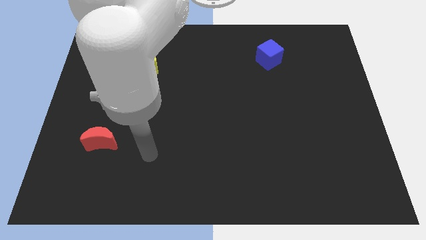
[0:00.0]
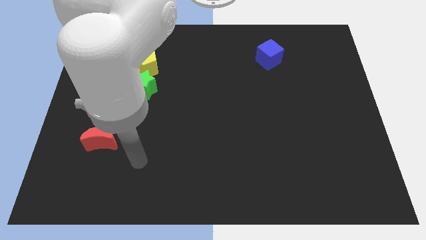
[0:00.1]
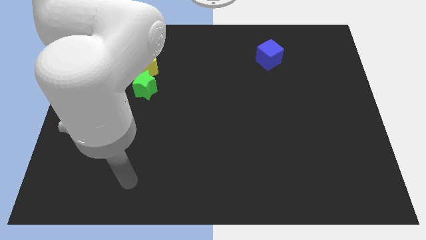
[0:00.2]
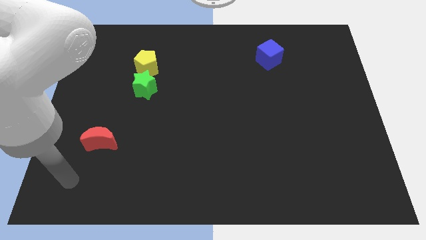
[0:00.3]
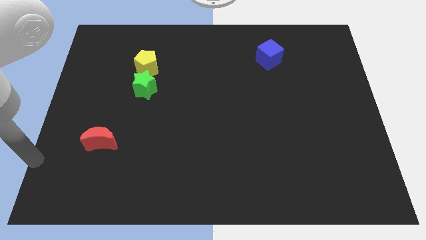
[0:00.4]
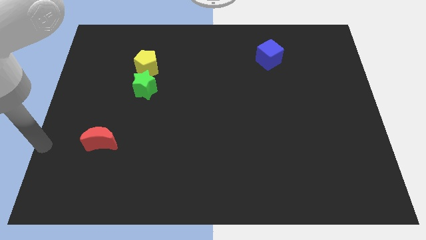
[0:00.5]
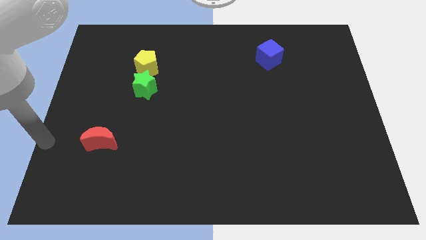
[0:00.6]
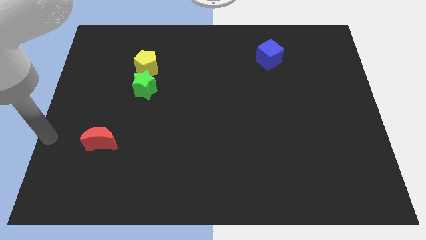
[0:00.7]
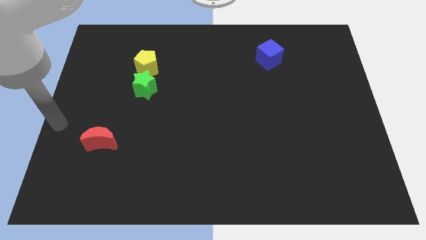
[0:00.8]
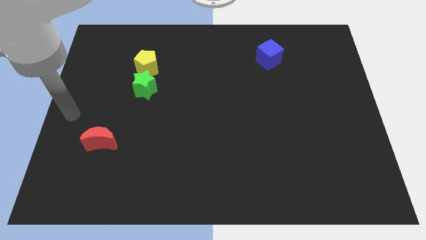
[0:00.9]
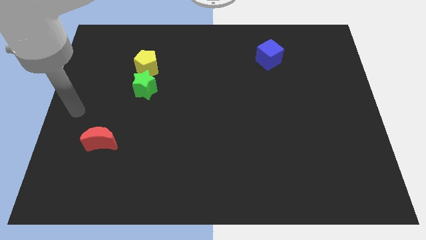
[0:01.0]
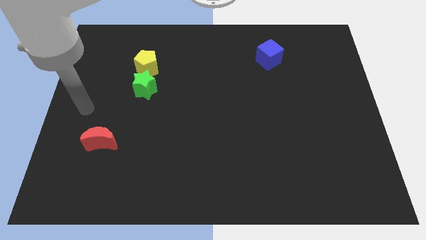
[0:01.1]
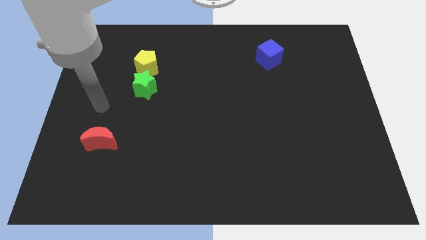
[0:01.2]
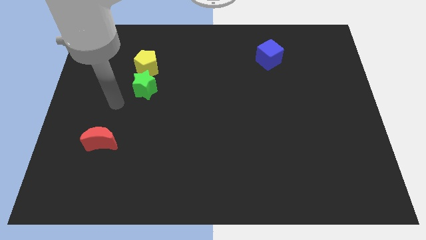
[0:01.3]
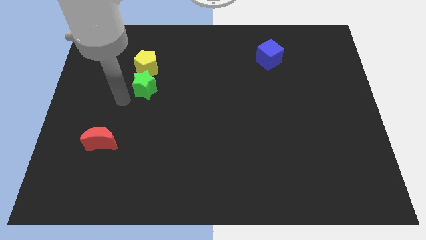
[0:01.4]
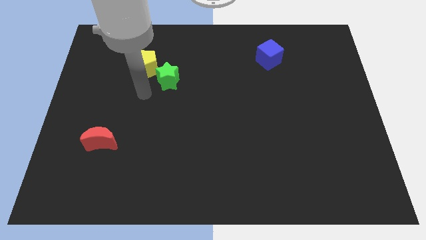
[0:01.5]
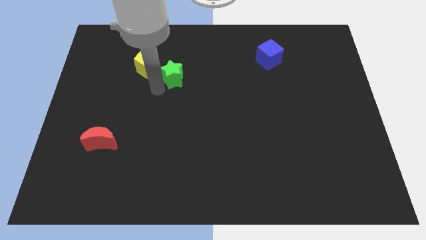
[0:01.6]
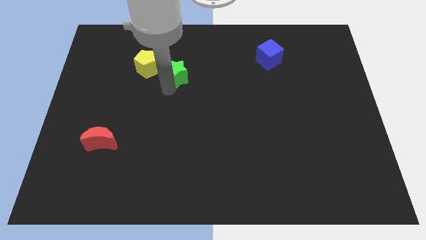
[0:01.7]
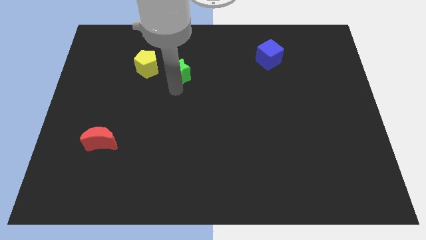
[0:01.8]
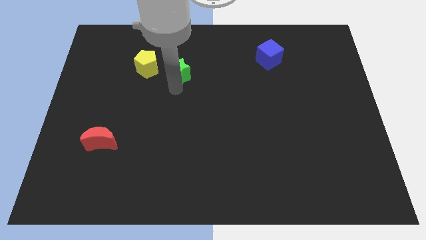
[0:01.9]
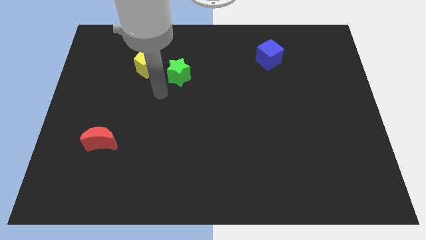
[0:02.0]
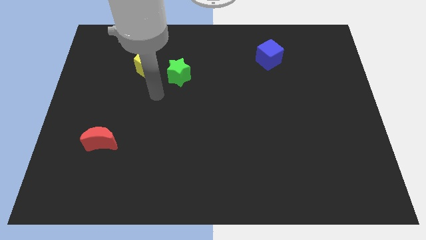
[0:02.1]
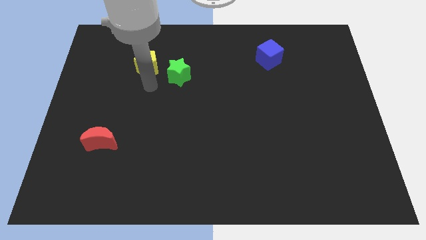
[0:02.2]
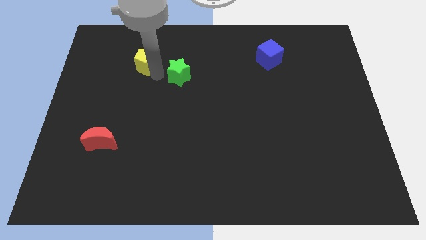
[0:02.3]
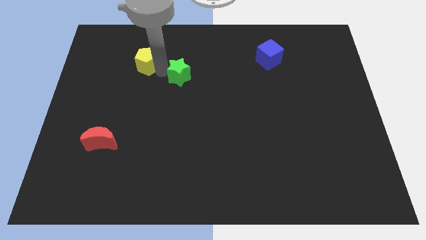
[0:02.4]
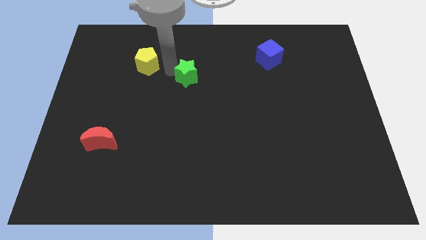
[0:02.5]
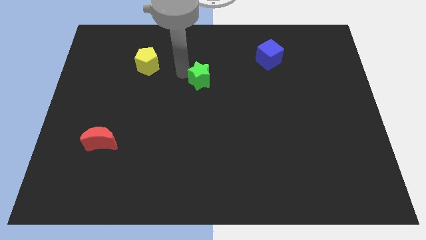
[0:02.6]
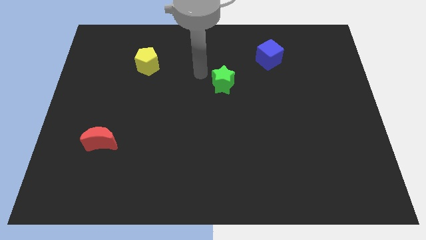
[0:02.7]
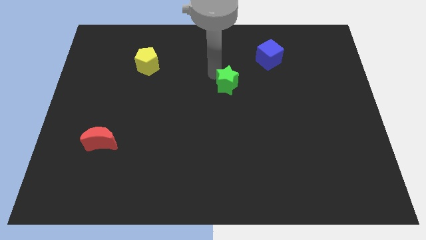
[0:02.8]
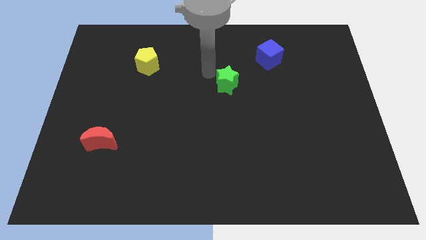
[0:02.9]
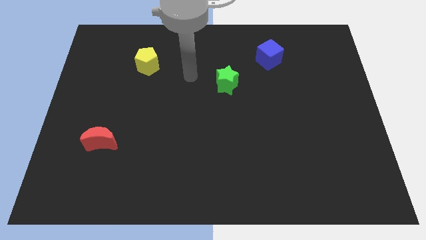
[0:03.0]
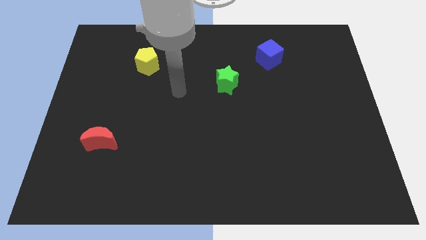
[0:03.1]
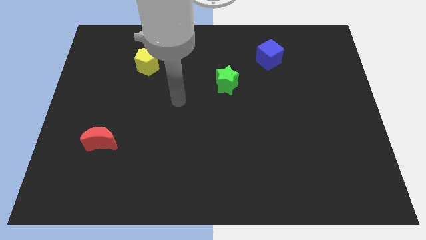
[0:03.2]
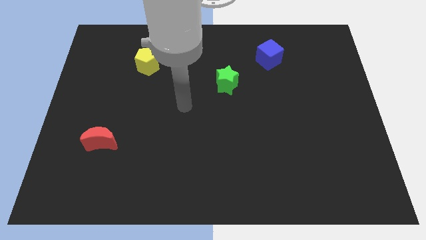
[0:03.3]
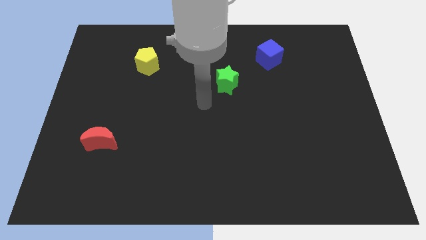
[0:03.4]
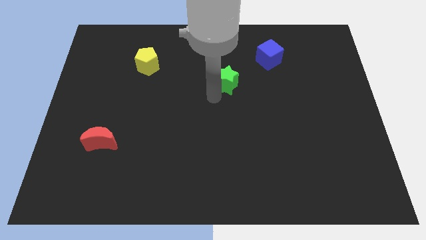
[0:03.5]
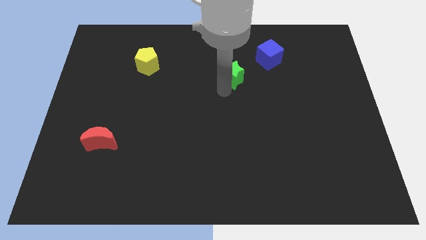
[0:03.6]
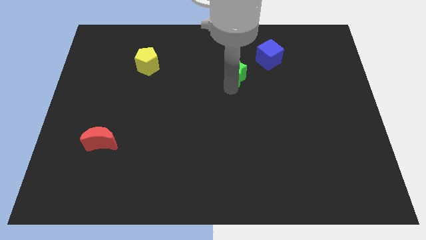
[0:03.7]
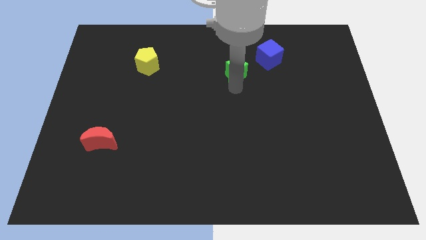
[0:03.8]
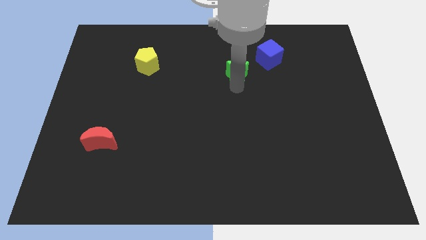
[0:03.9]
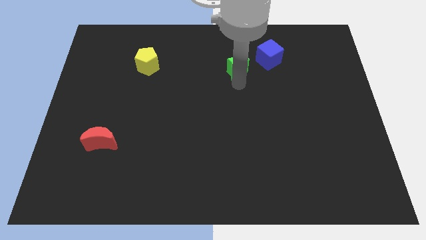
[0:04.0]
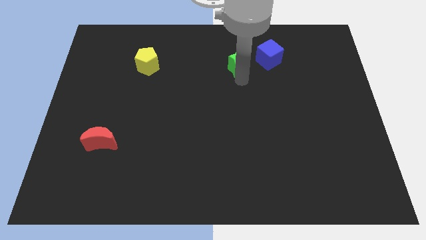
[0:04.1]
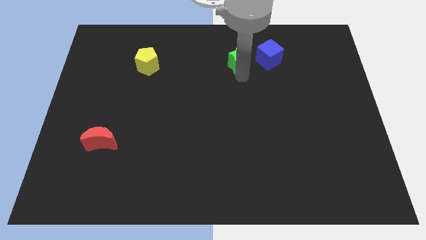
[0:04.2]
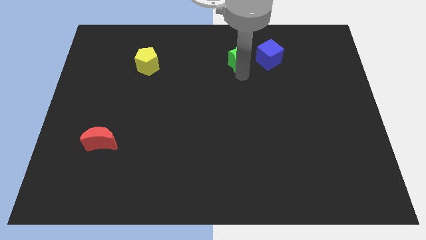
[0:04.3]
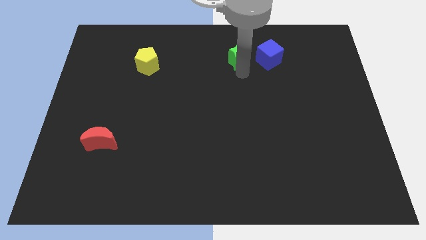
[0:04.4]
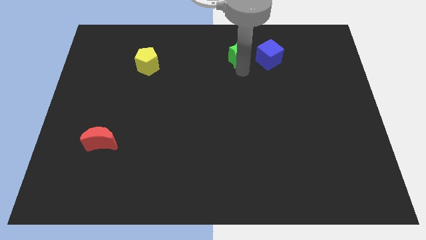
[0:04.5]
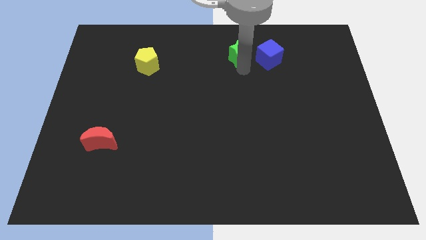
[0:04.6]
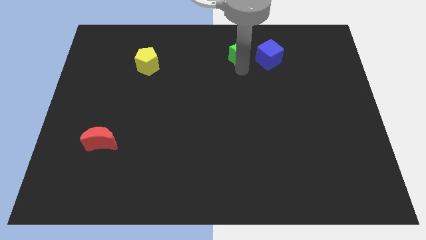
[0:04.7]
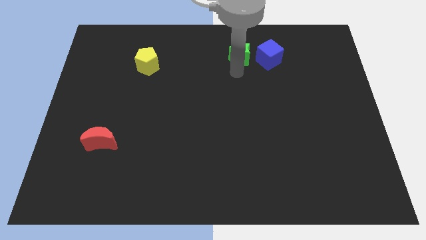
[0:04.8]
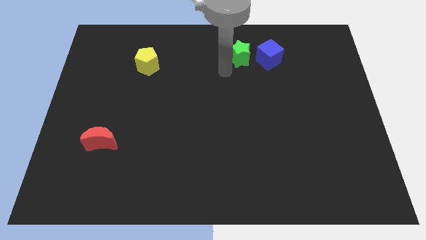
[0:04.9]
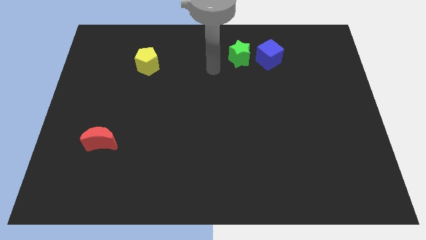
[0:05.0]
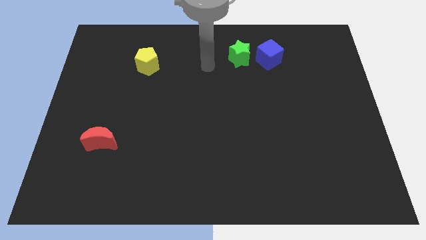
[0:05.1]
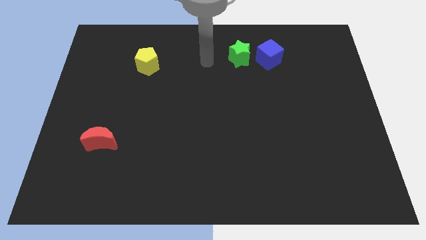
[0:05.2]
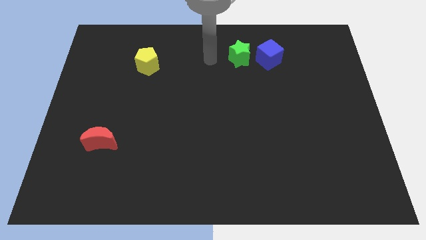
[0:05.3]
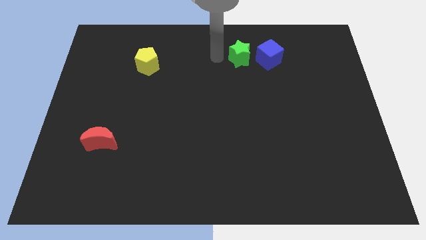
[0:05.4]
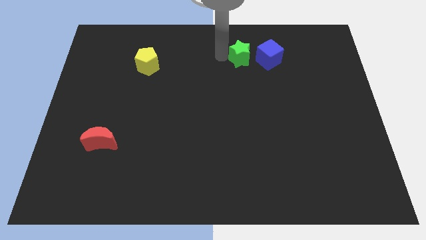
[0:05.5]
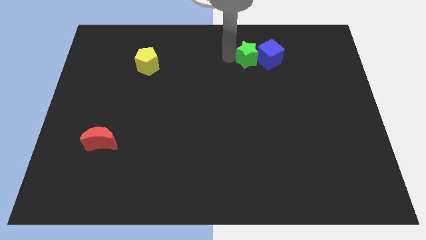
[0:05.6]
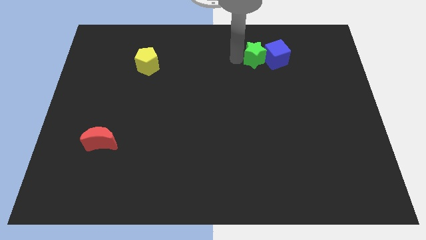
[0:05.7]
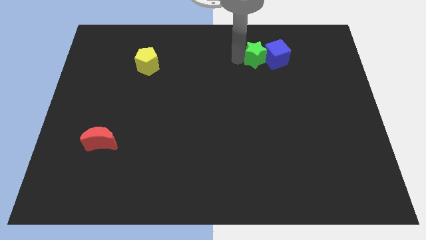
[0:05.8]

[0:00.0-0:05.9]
put the green block to the cube

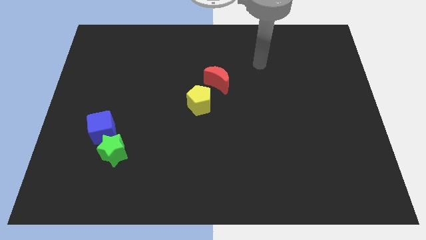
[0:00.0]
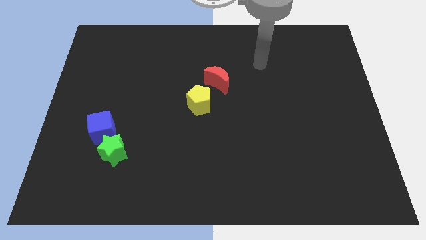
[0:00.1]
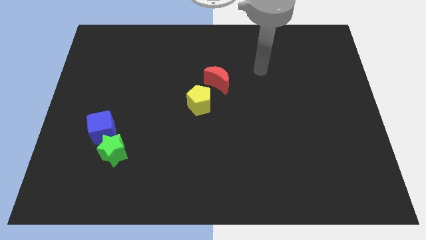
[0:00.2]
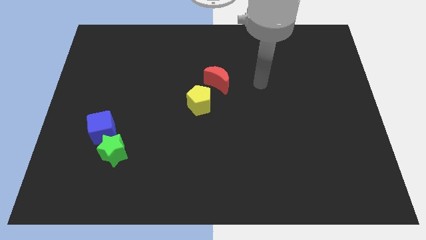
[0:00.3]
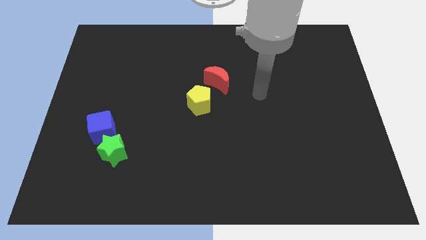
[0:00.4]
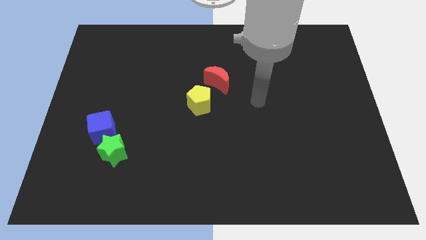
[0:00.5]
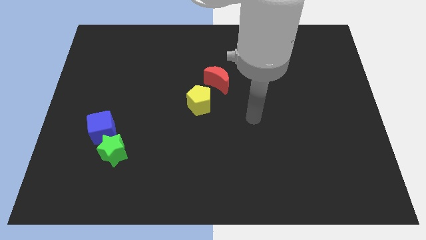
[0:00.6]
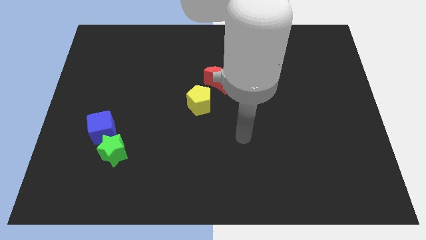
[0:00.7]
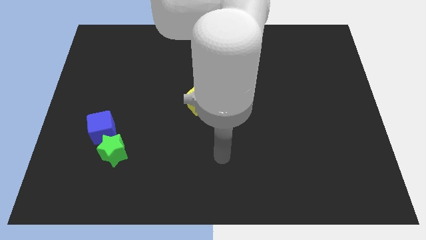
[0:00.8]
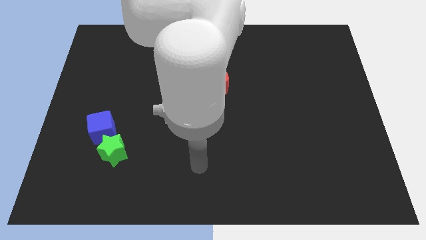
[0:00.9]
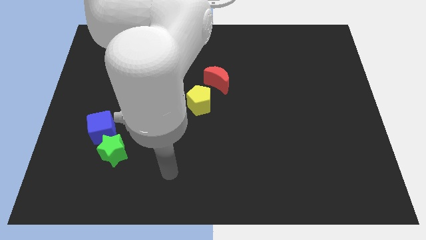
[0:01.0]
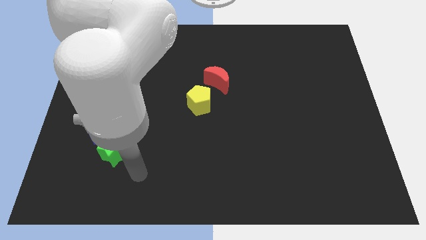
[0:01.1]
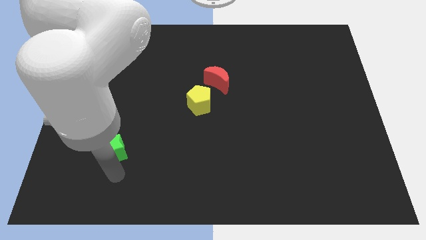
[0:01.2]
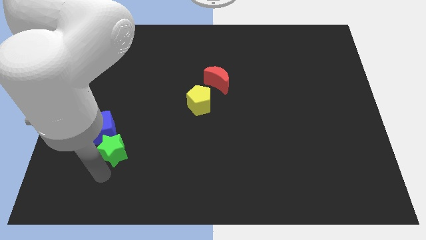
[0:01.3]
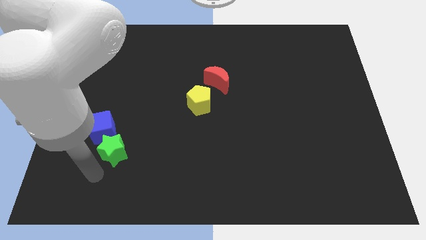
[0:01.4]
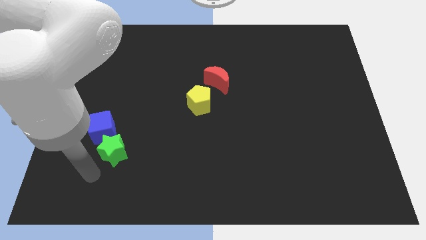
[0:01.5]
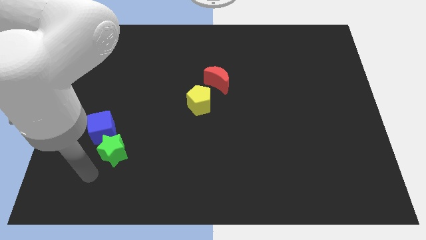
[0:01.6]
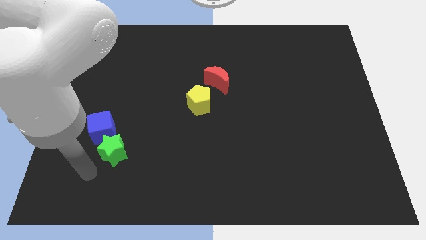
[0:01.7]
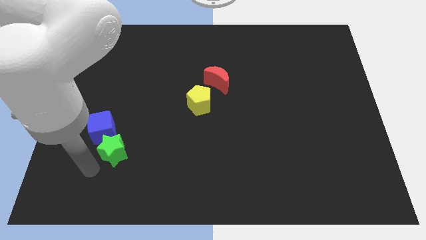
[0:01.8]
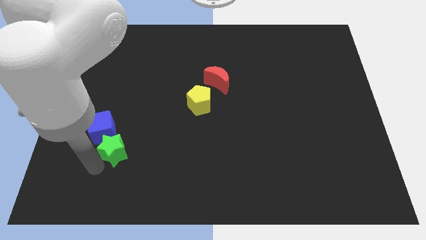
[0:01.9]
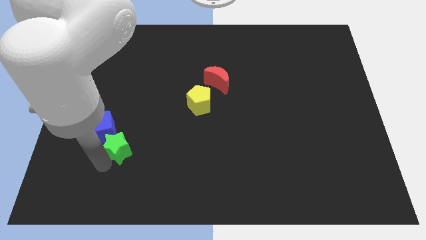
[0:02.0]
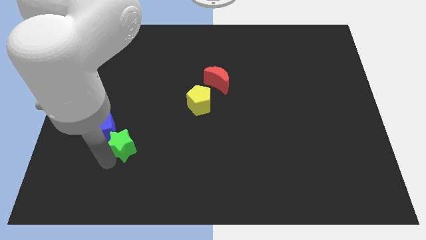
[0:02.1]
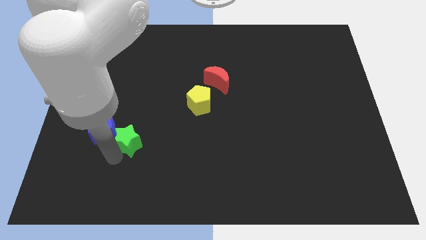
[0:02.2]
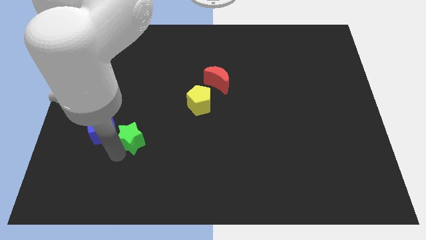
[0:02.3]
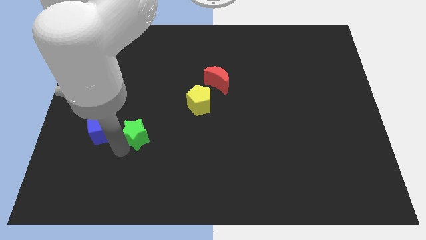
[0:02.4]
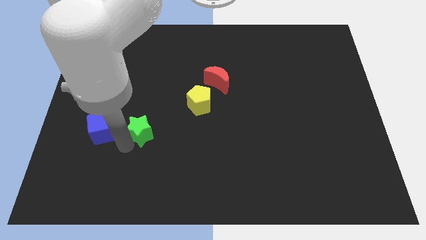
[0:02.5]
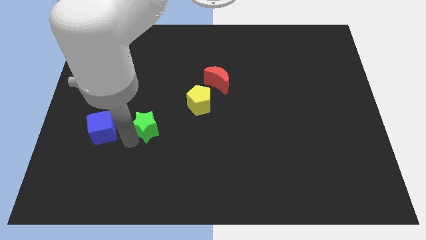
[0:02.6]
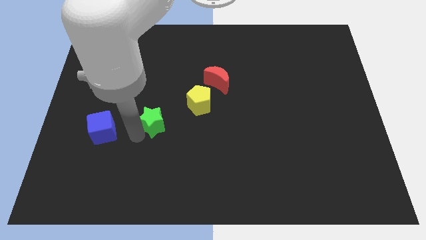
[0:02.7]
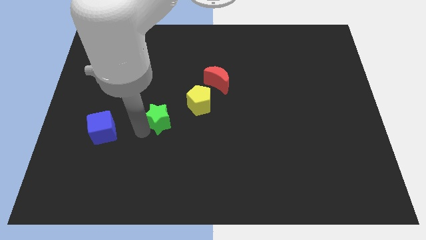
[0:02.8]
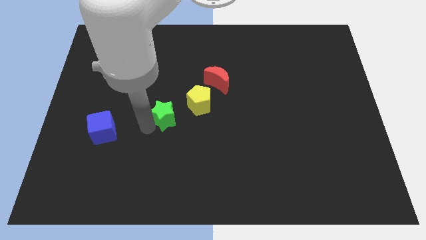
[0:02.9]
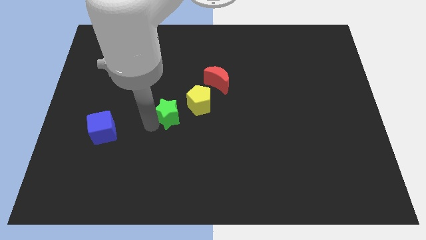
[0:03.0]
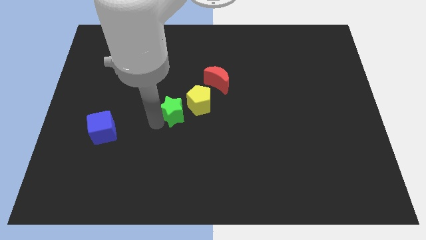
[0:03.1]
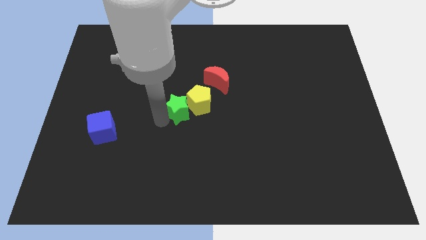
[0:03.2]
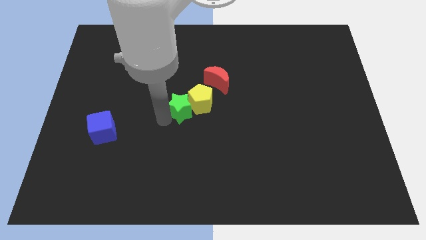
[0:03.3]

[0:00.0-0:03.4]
put the green star close to the yellow pentagon
